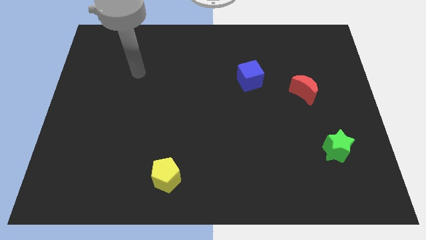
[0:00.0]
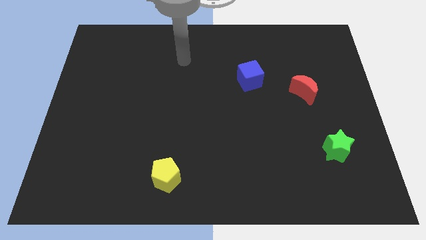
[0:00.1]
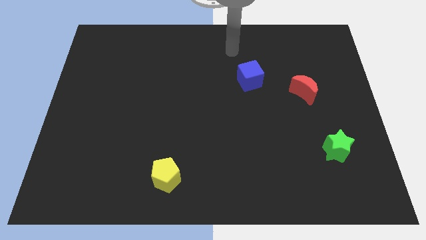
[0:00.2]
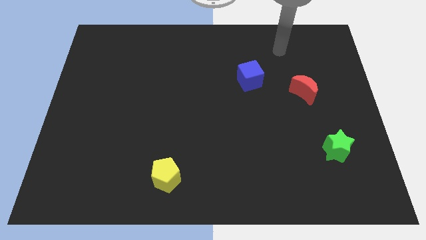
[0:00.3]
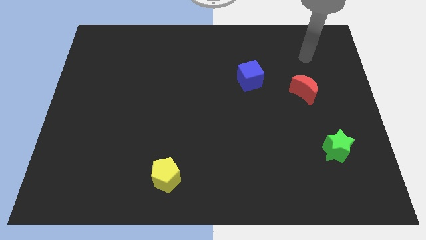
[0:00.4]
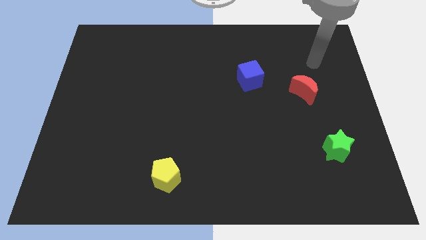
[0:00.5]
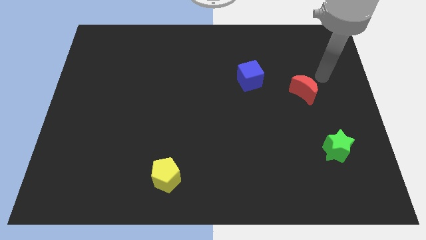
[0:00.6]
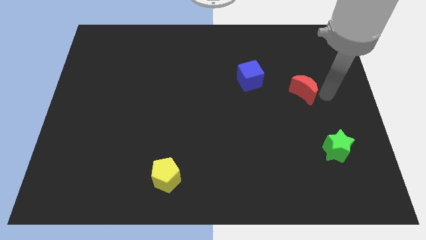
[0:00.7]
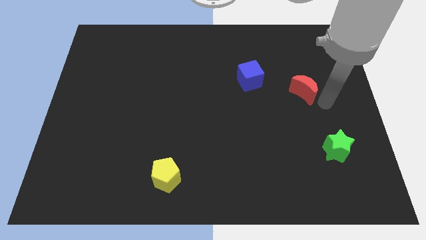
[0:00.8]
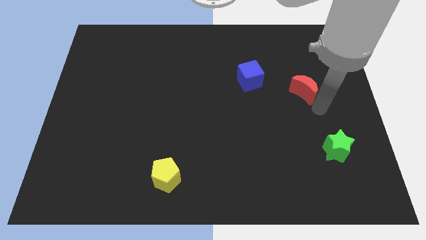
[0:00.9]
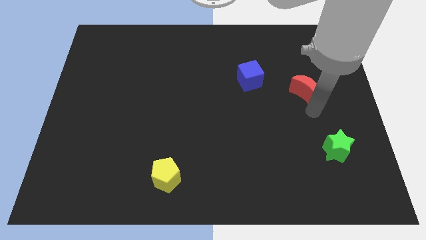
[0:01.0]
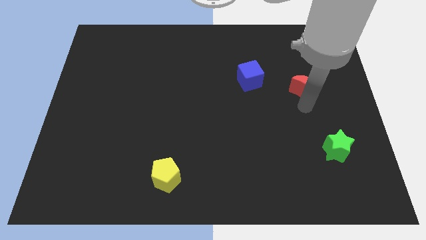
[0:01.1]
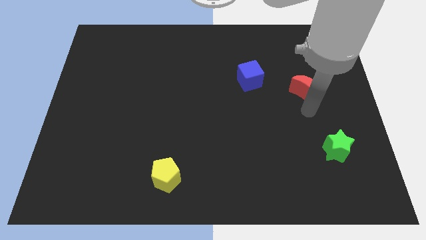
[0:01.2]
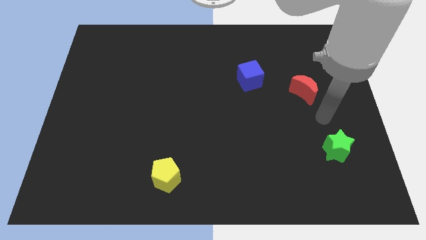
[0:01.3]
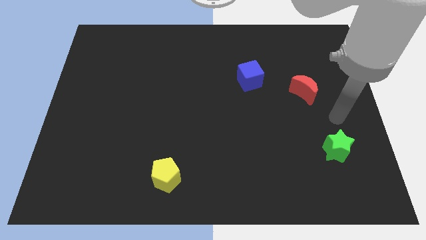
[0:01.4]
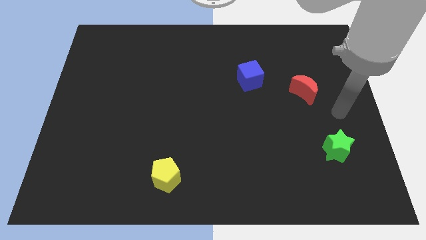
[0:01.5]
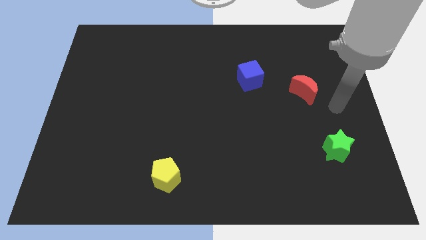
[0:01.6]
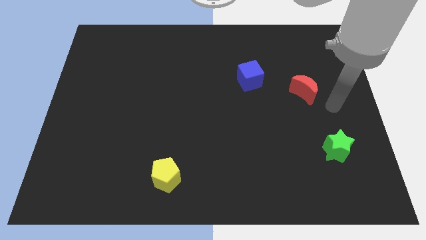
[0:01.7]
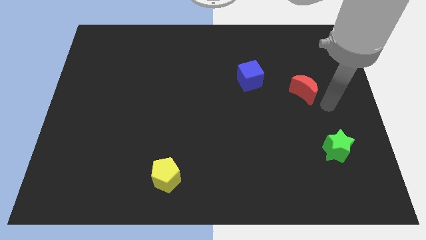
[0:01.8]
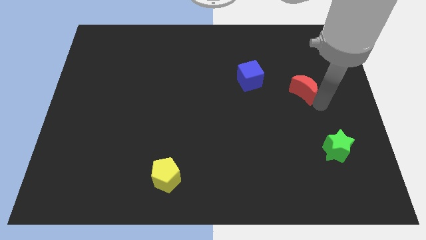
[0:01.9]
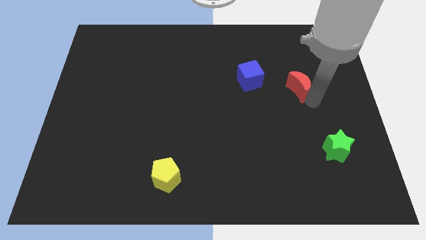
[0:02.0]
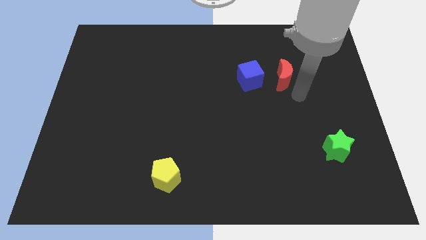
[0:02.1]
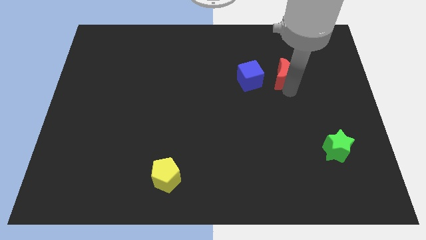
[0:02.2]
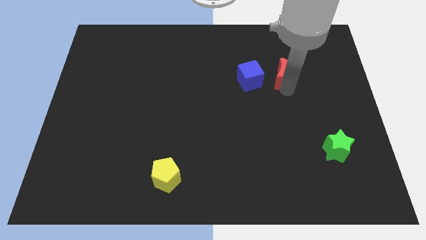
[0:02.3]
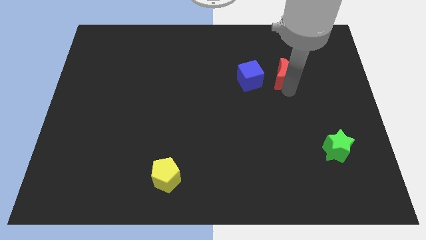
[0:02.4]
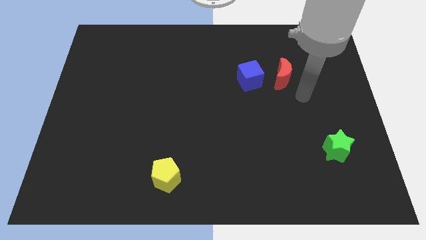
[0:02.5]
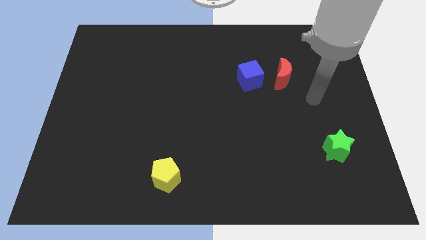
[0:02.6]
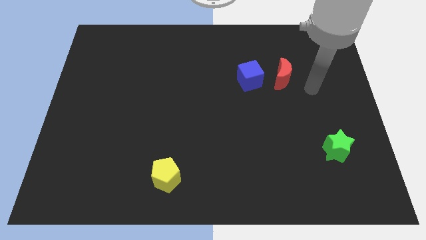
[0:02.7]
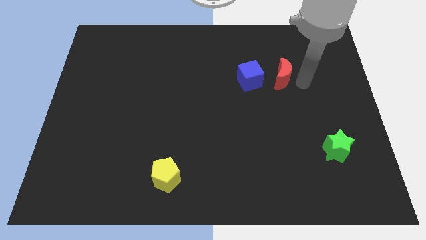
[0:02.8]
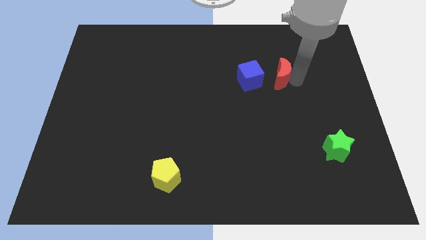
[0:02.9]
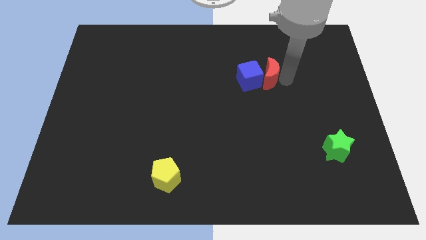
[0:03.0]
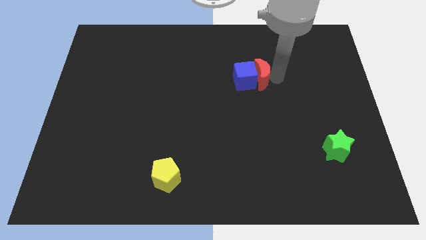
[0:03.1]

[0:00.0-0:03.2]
slide the red block to the blue cube

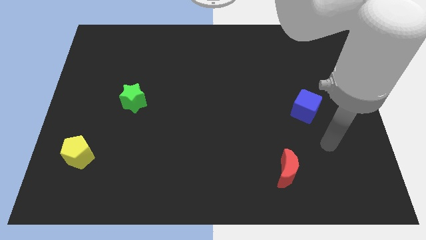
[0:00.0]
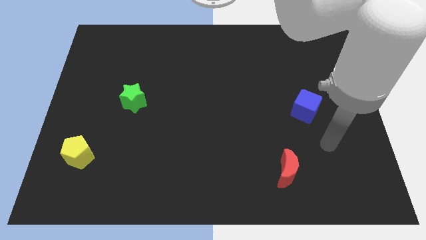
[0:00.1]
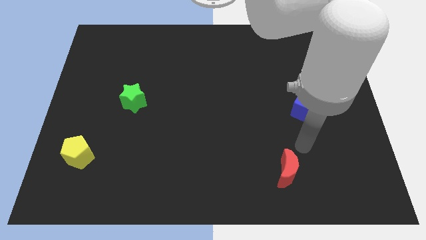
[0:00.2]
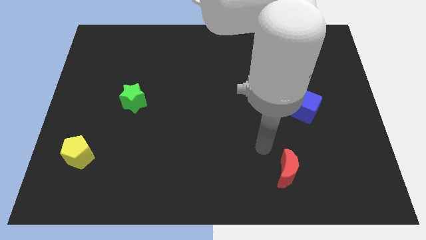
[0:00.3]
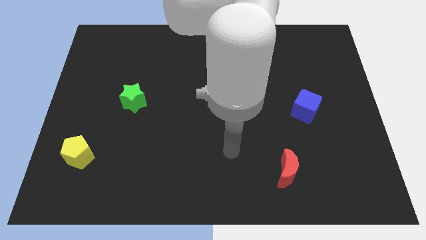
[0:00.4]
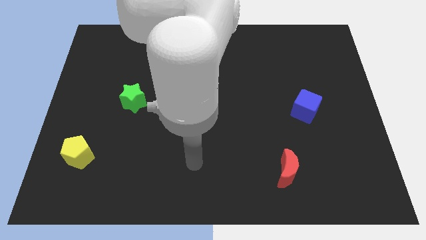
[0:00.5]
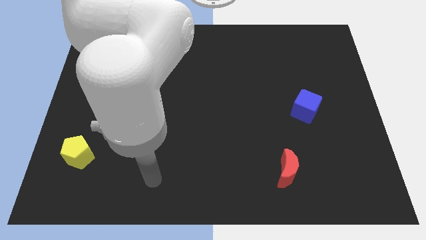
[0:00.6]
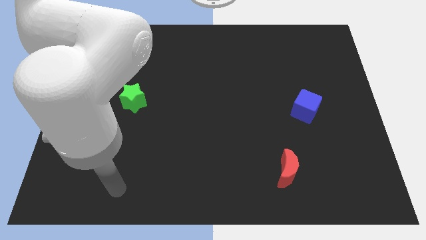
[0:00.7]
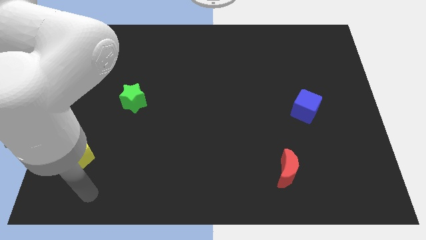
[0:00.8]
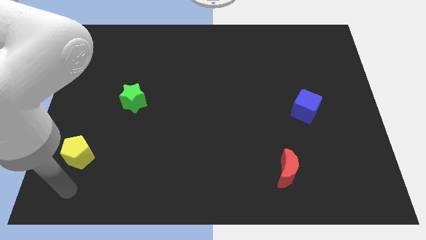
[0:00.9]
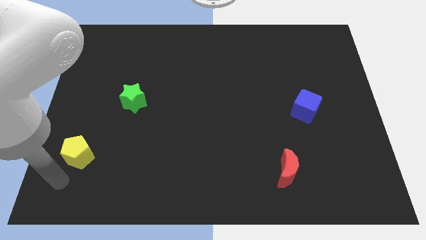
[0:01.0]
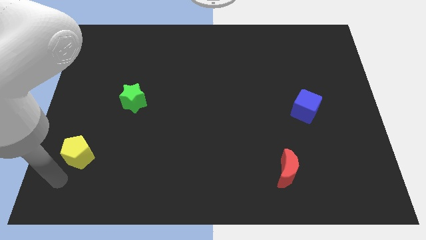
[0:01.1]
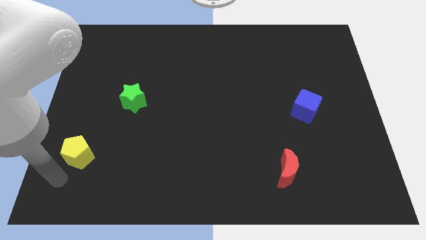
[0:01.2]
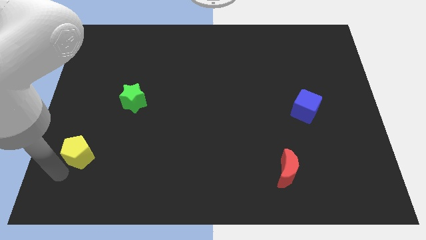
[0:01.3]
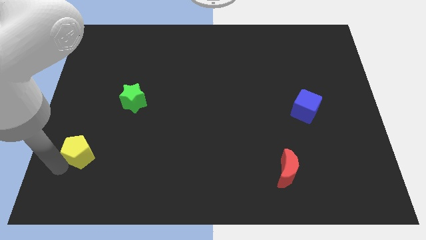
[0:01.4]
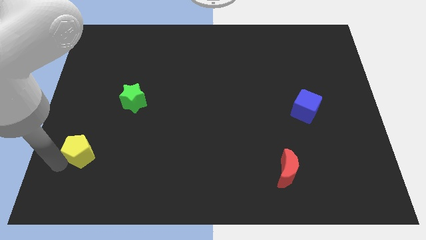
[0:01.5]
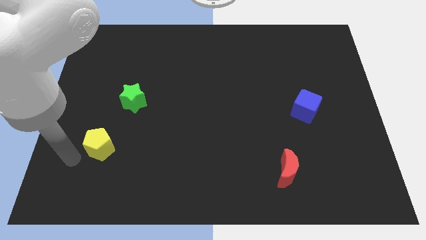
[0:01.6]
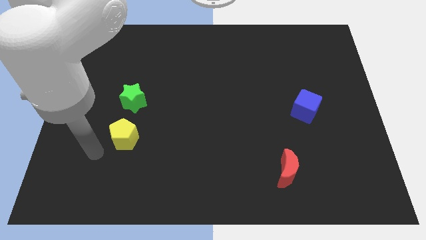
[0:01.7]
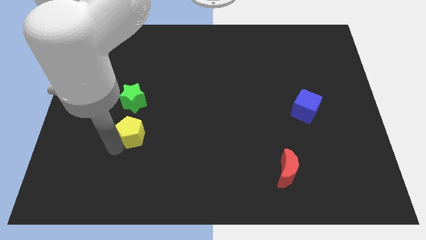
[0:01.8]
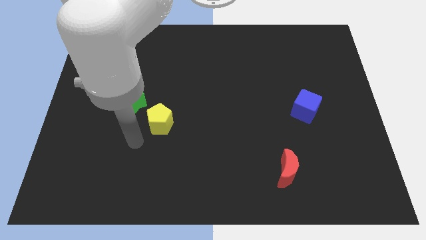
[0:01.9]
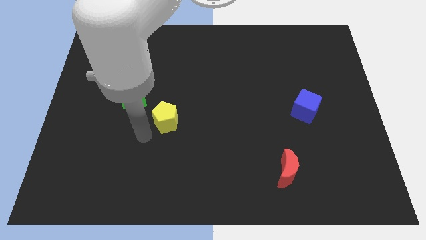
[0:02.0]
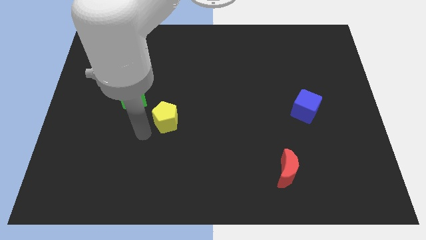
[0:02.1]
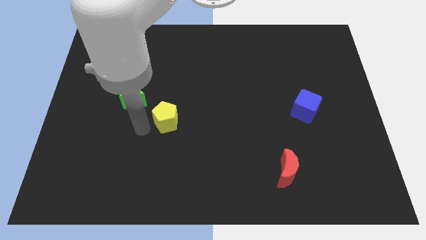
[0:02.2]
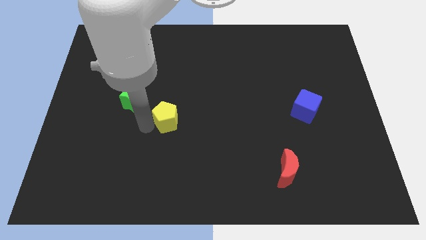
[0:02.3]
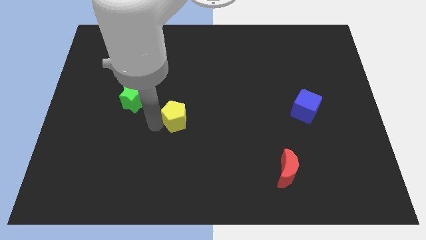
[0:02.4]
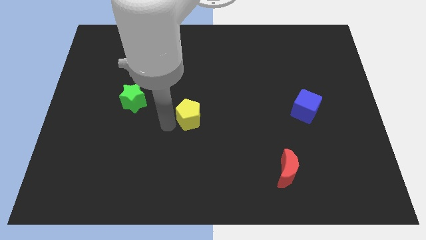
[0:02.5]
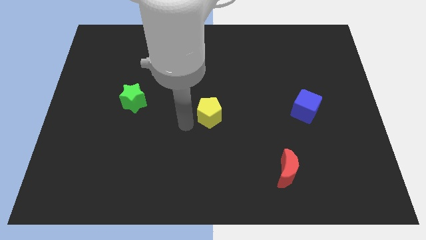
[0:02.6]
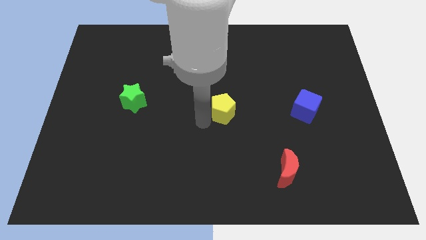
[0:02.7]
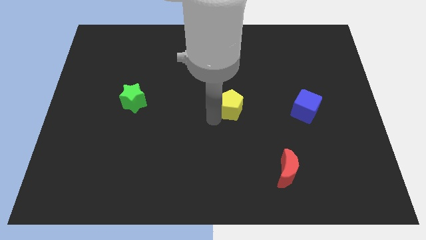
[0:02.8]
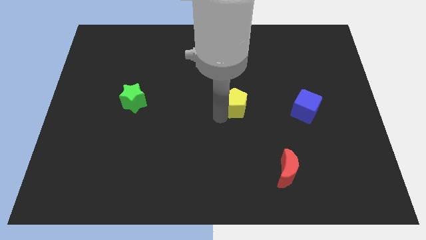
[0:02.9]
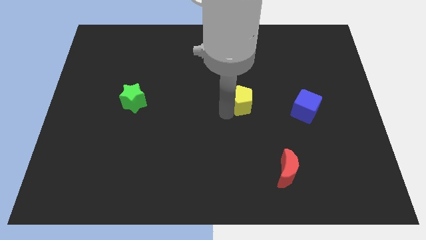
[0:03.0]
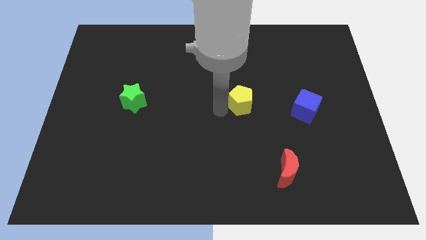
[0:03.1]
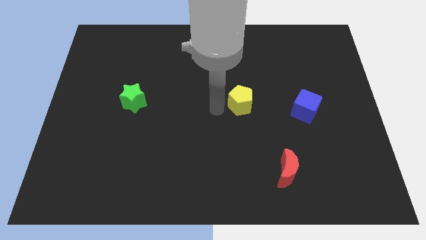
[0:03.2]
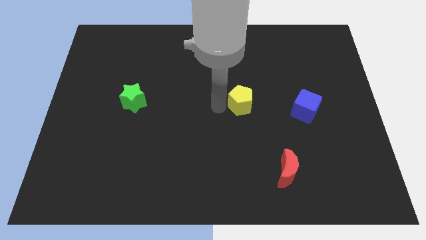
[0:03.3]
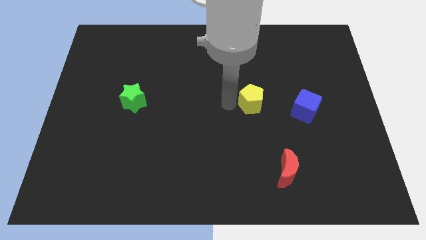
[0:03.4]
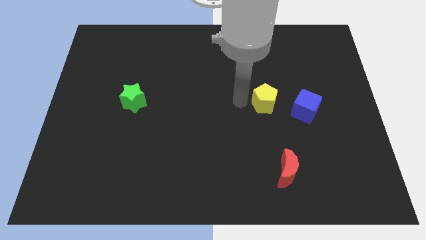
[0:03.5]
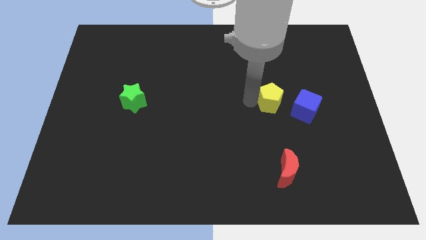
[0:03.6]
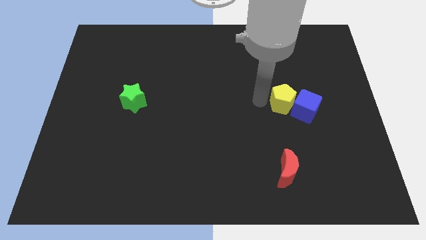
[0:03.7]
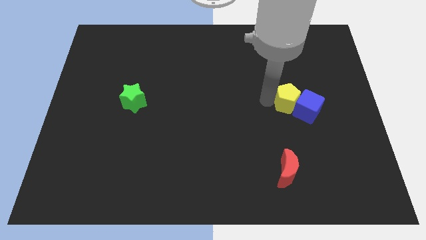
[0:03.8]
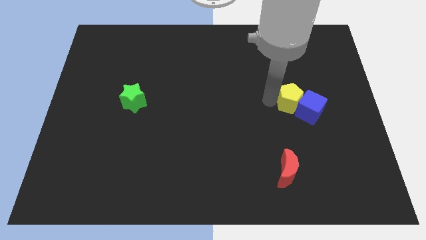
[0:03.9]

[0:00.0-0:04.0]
push the yellow pentagon close to the cube

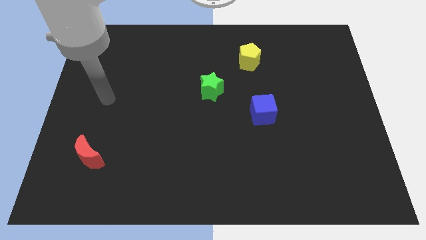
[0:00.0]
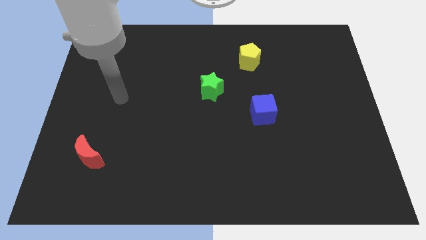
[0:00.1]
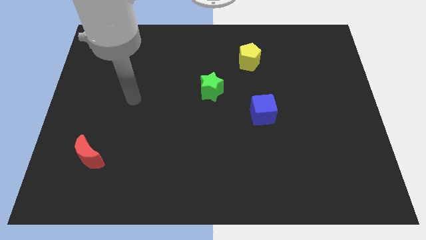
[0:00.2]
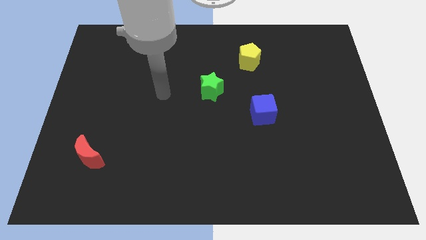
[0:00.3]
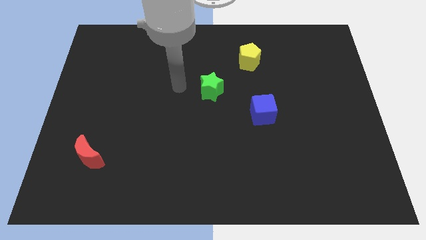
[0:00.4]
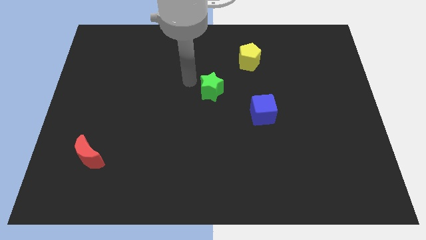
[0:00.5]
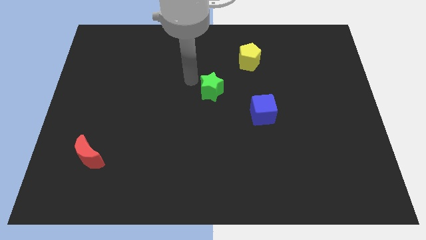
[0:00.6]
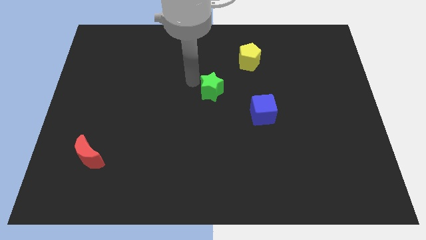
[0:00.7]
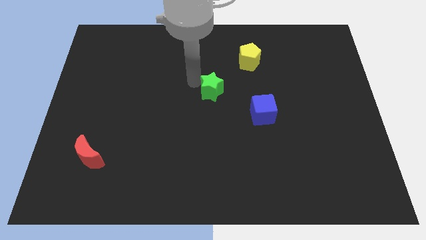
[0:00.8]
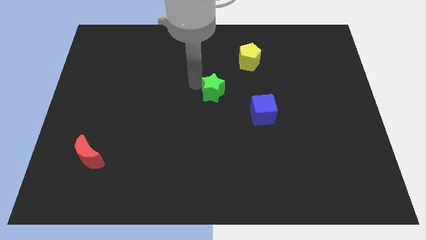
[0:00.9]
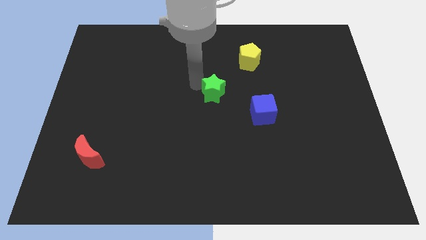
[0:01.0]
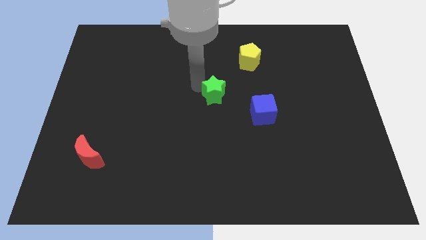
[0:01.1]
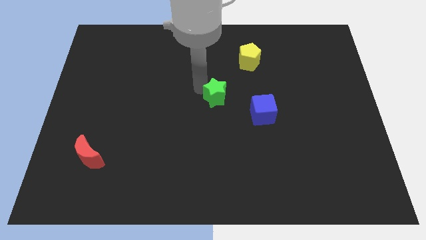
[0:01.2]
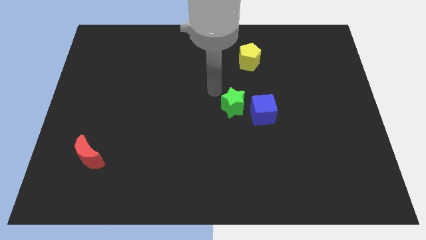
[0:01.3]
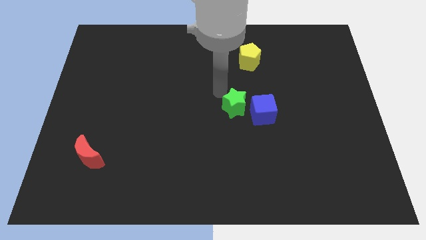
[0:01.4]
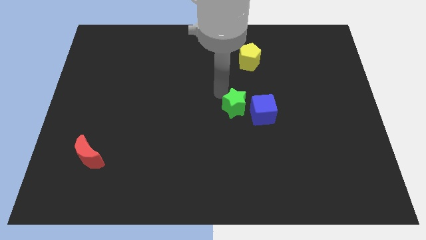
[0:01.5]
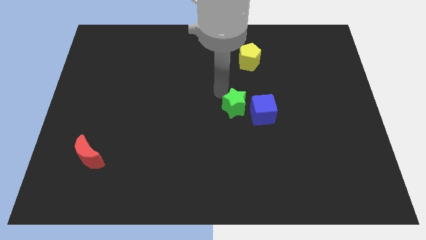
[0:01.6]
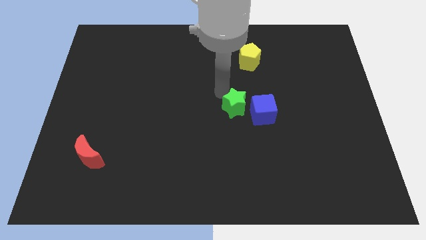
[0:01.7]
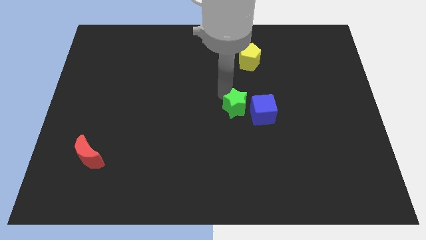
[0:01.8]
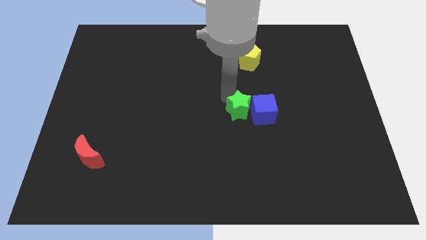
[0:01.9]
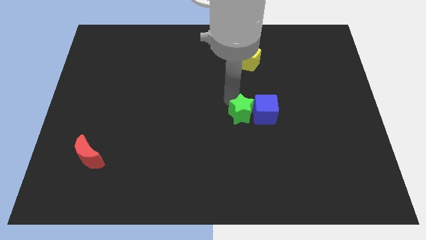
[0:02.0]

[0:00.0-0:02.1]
move the green star close to the cube
